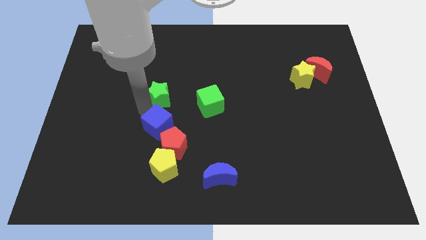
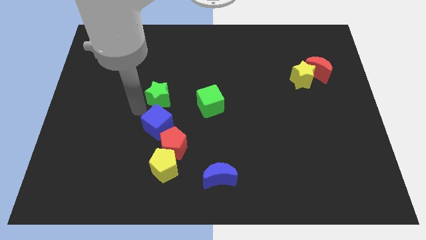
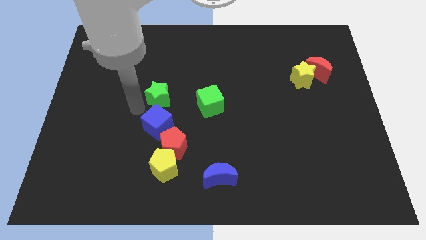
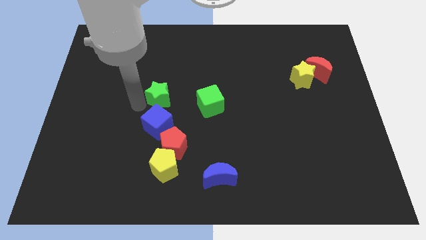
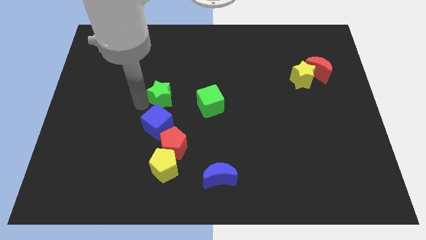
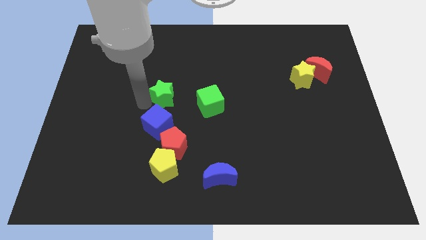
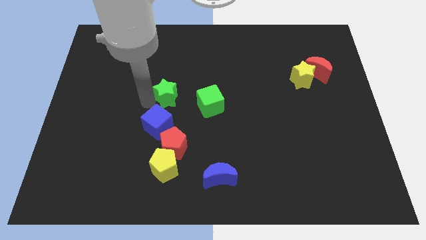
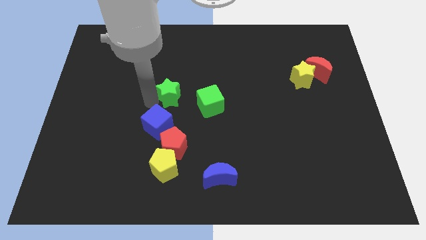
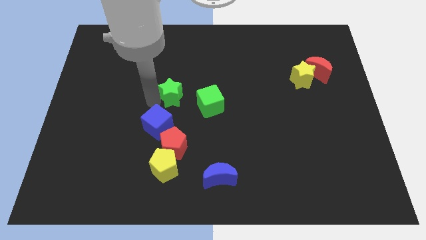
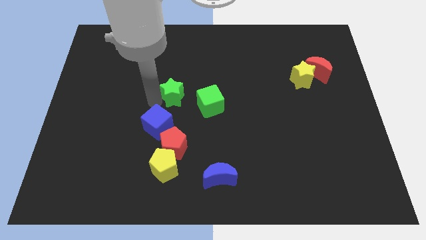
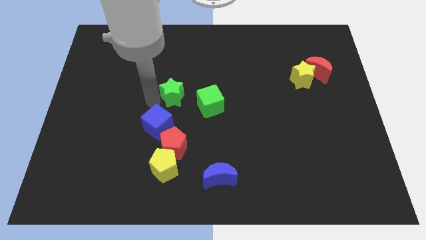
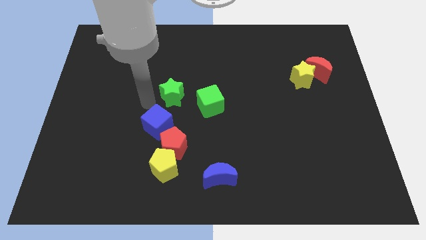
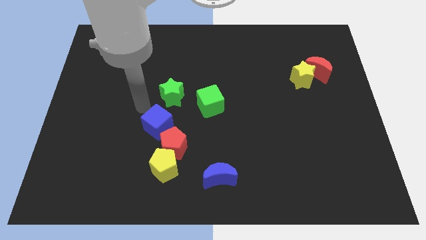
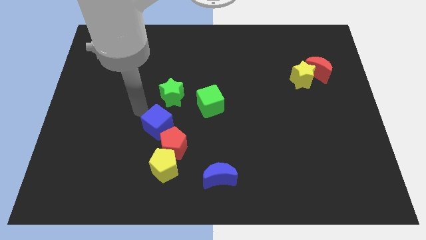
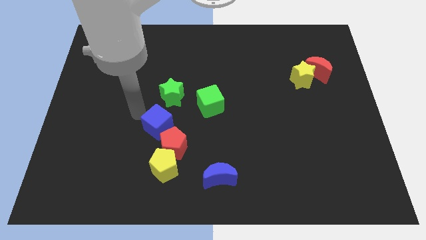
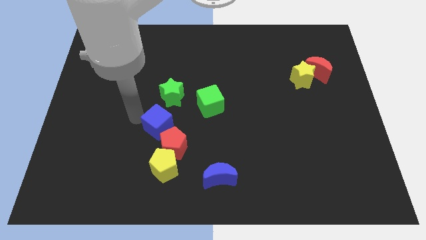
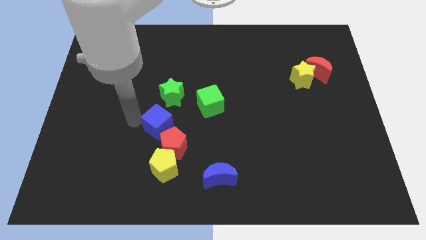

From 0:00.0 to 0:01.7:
move the green star left to the green cube

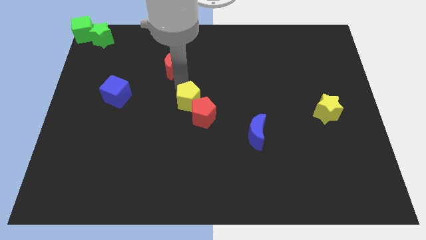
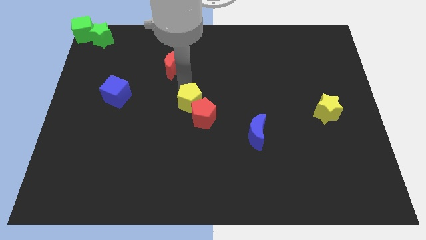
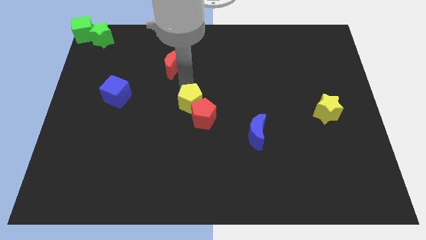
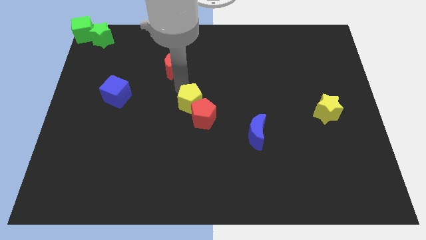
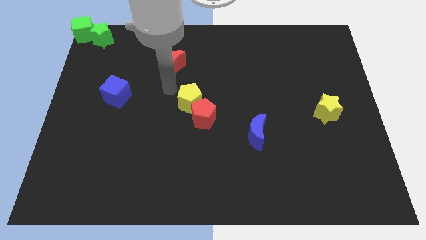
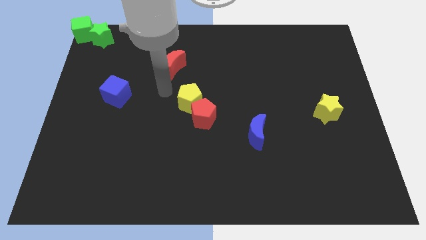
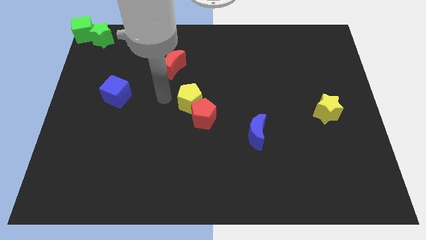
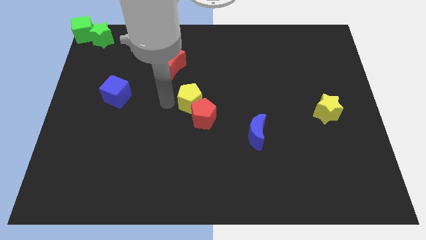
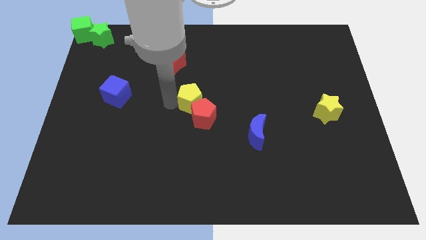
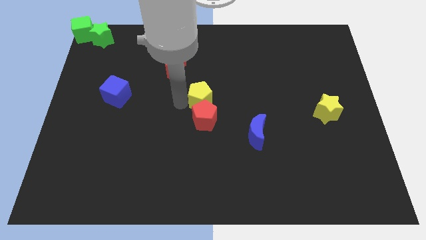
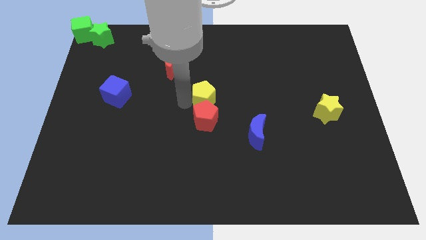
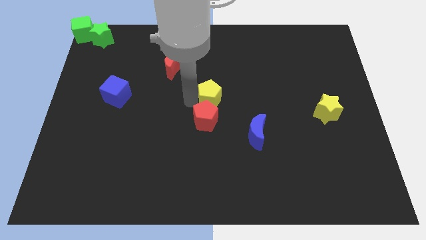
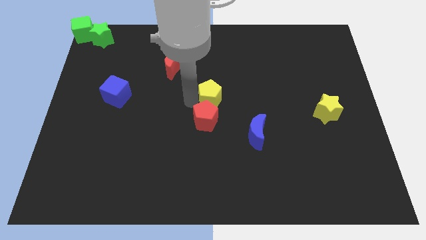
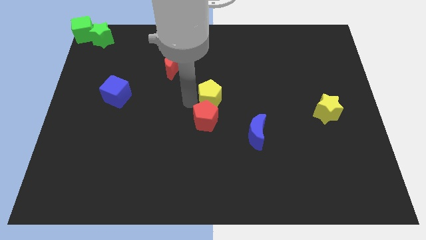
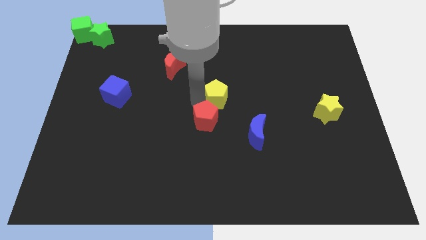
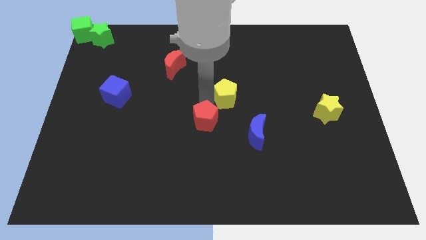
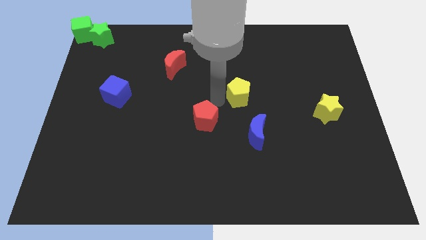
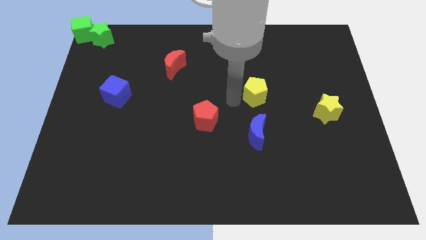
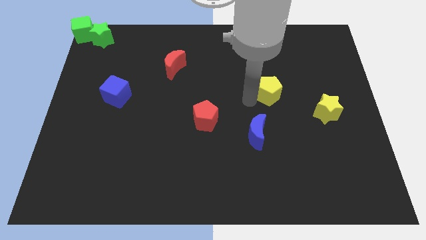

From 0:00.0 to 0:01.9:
place the yellow pentagon above the blue moon

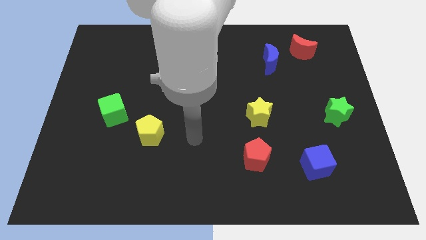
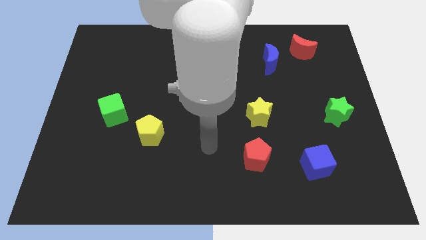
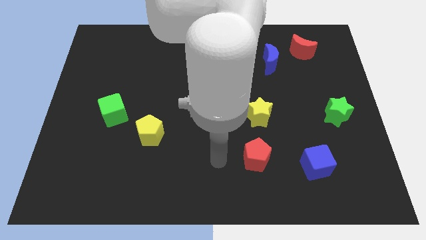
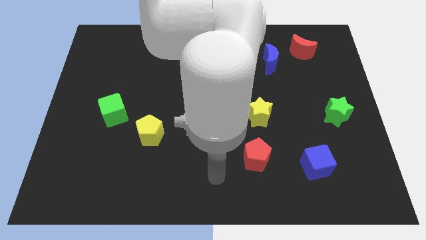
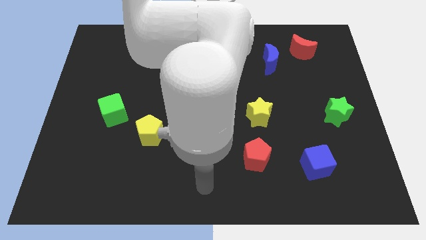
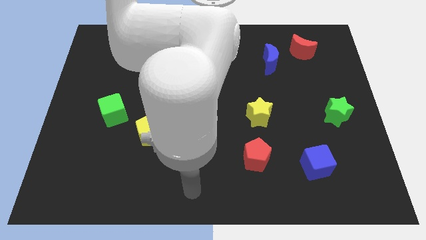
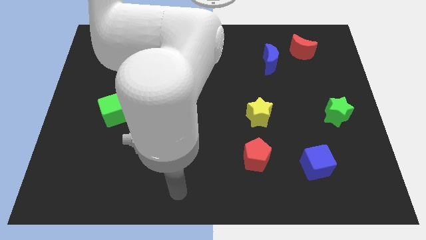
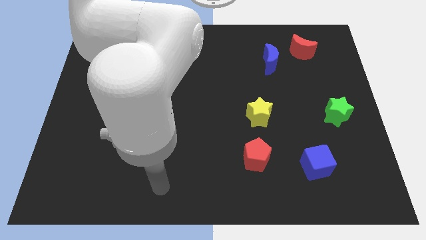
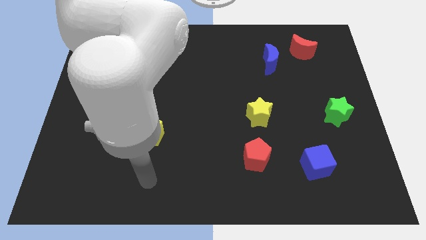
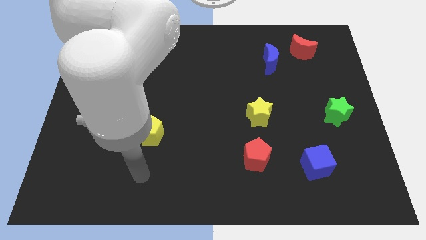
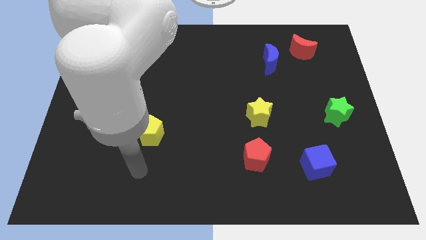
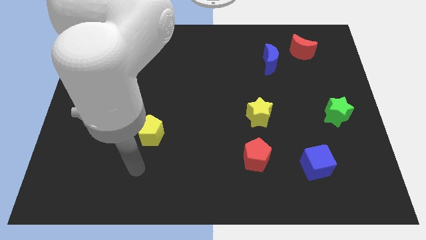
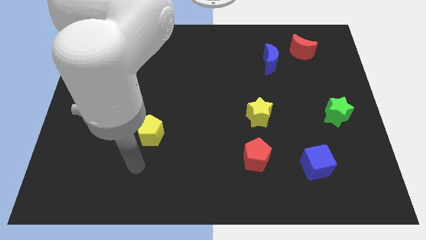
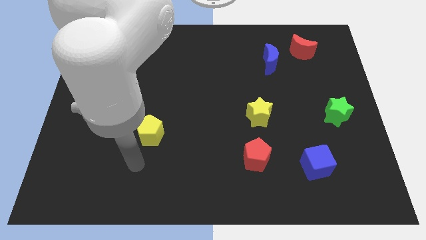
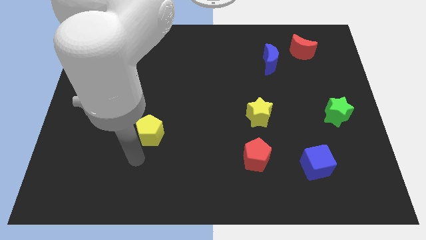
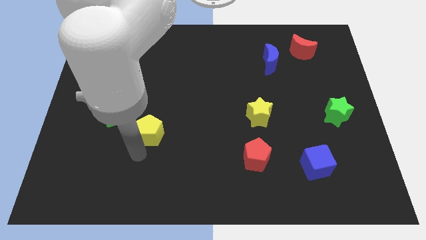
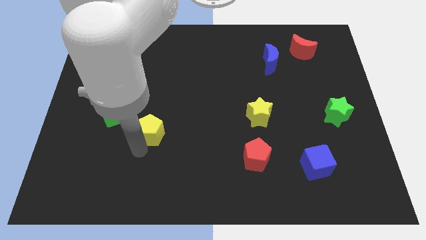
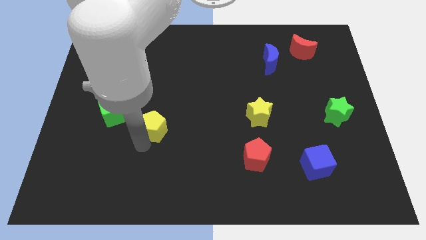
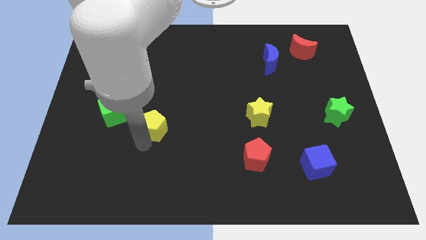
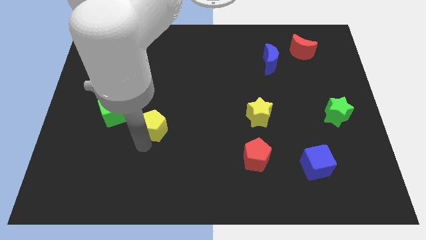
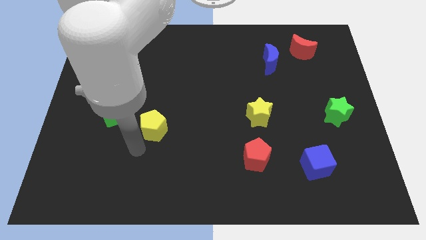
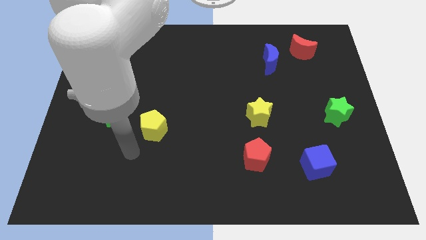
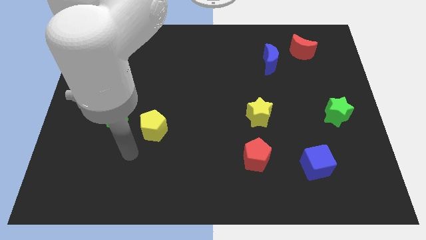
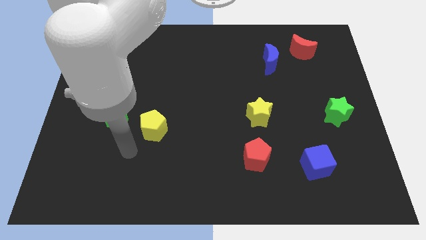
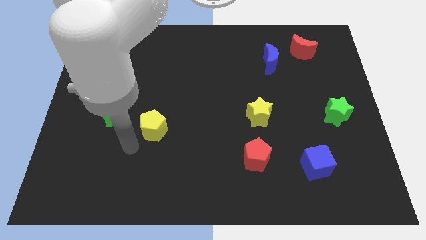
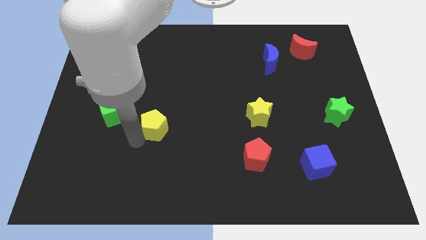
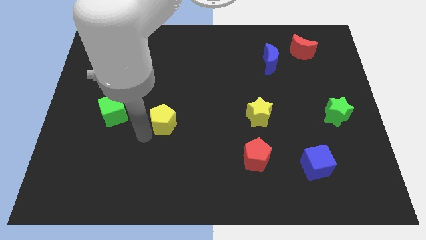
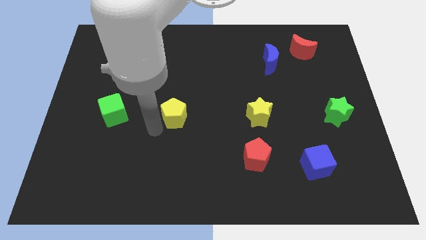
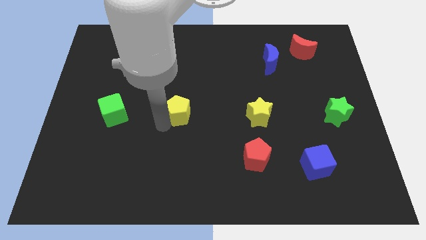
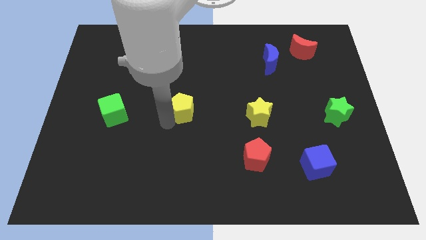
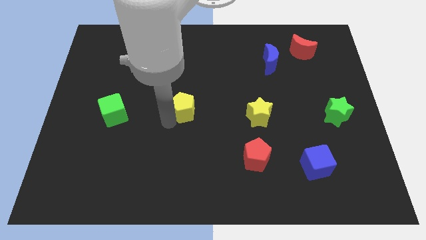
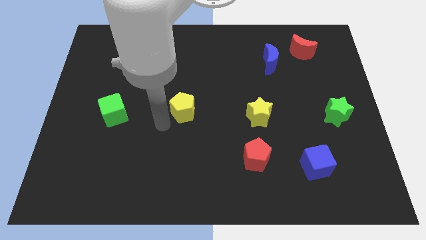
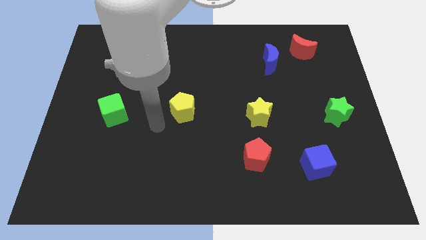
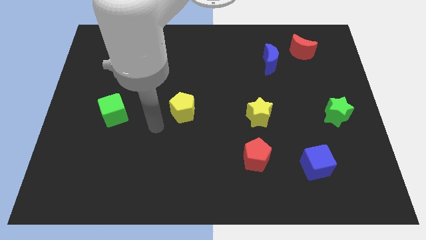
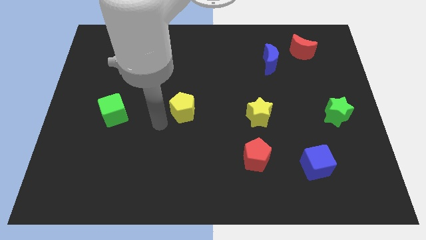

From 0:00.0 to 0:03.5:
place yellow pentagon in between green cube and yellow star

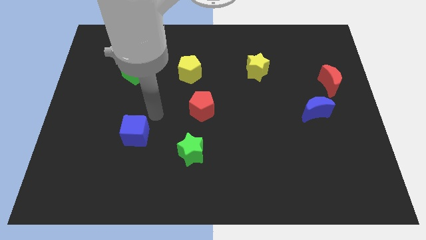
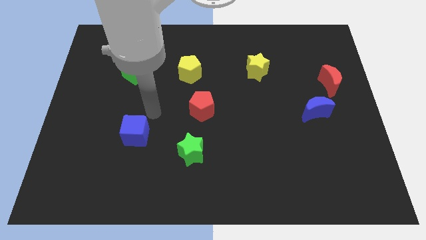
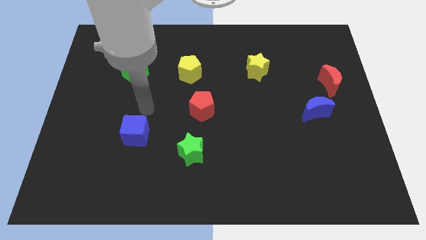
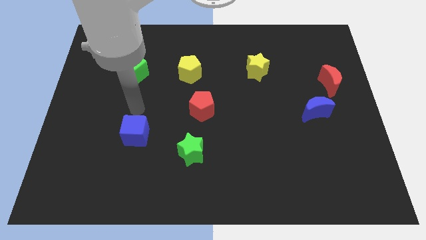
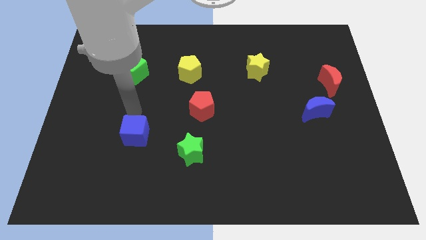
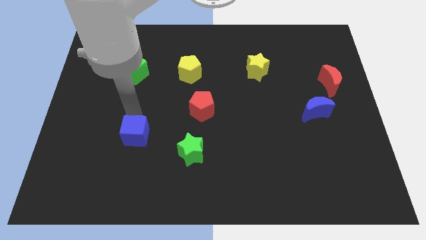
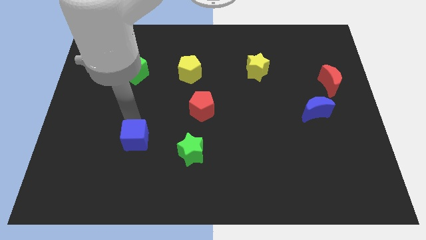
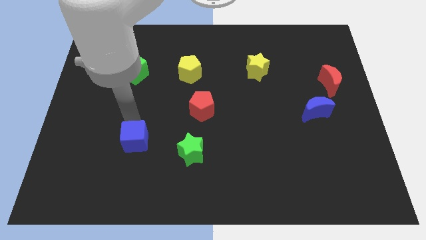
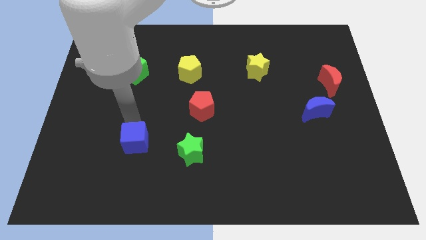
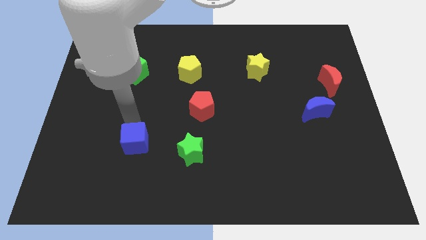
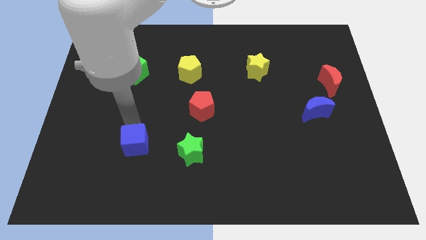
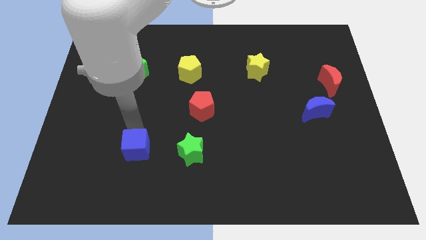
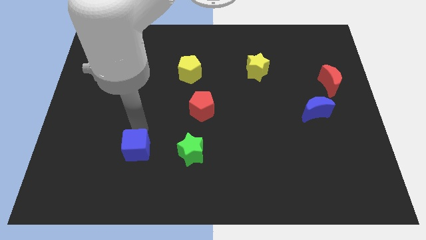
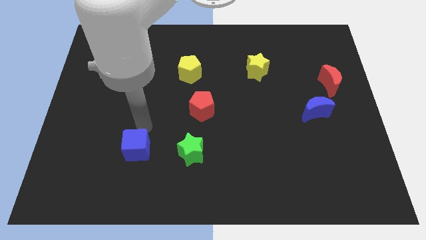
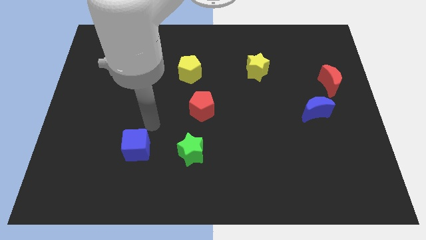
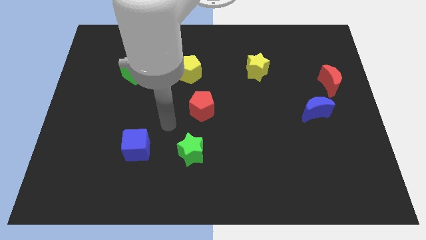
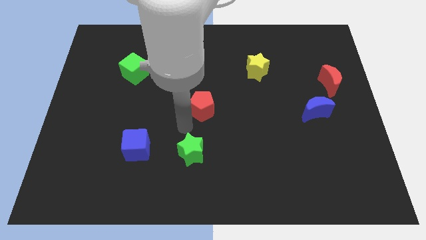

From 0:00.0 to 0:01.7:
move the blue cube slightly left to the blue cube

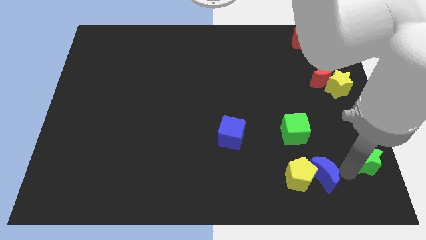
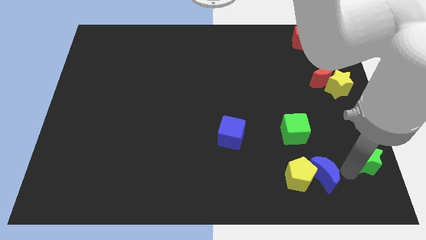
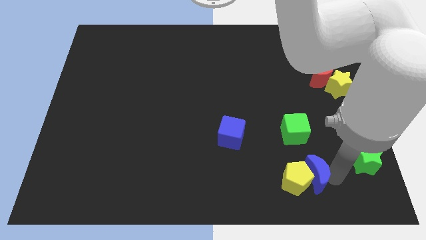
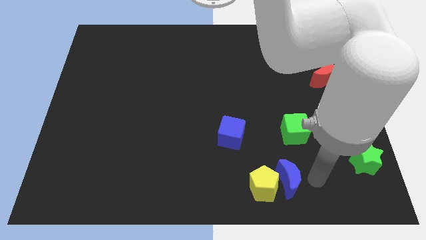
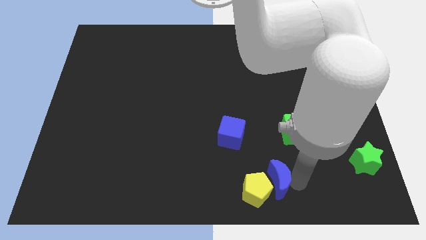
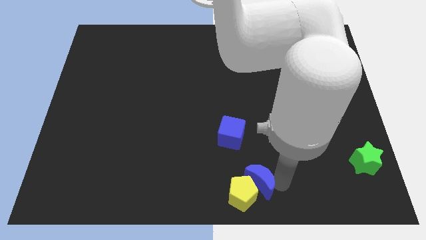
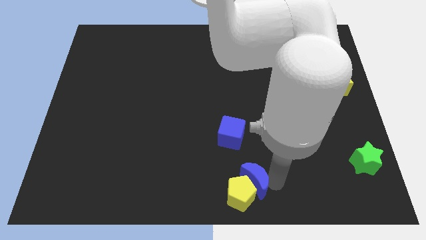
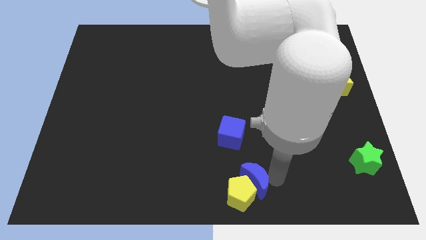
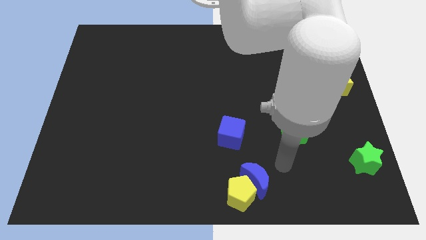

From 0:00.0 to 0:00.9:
move the blue moon into the yellow pentagon
